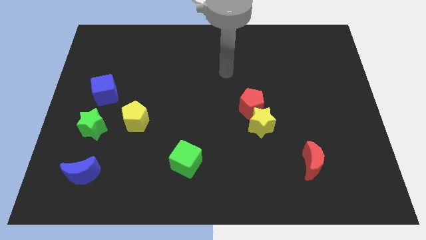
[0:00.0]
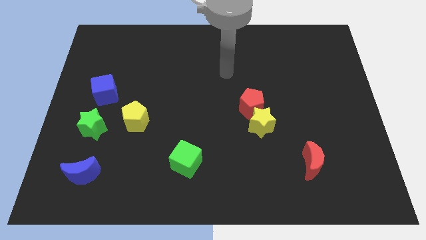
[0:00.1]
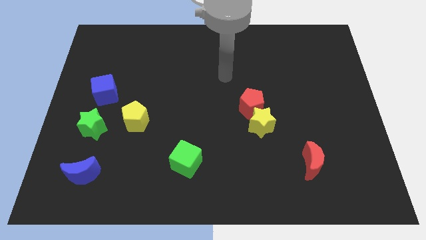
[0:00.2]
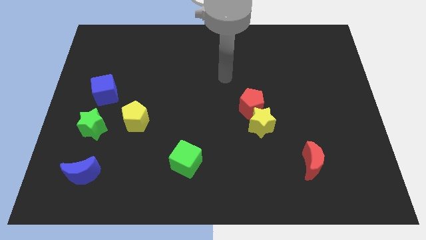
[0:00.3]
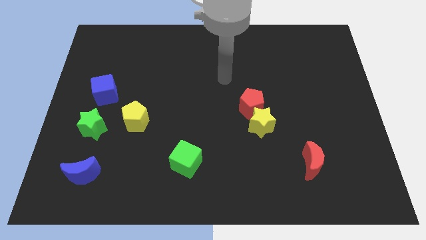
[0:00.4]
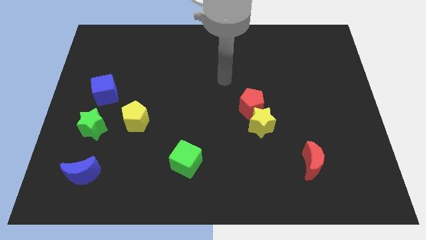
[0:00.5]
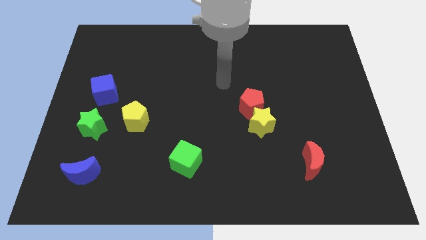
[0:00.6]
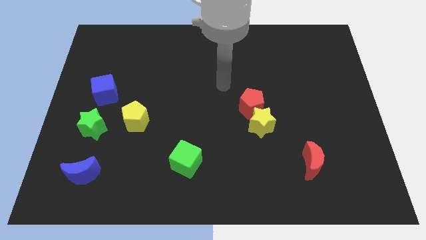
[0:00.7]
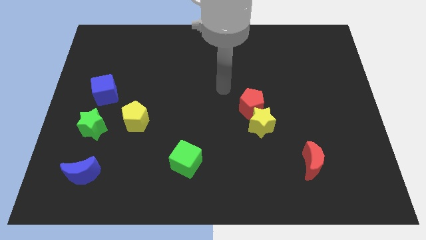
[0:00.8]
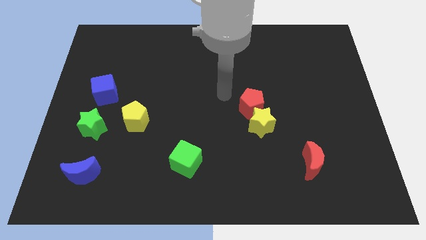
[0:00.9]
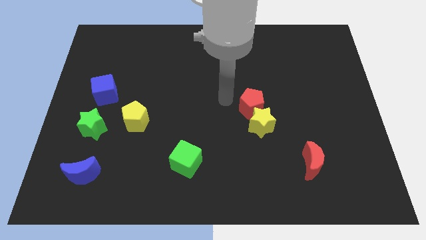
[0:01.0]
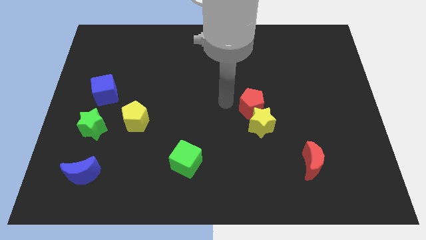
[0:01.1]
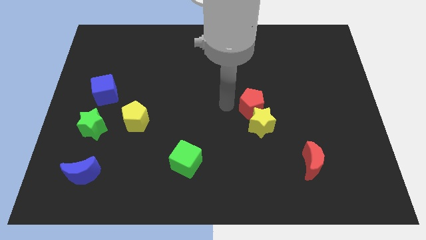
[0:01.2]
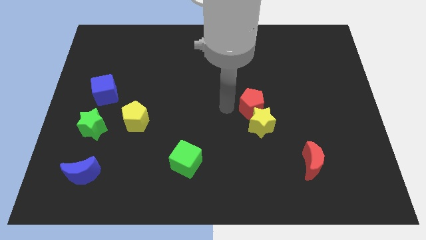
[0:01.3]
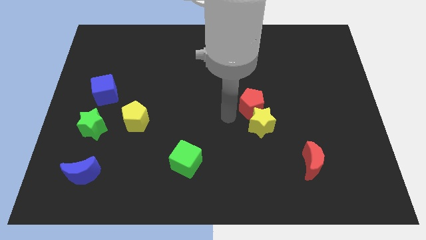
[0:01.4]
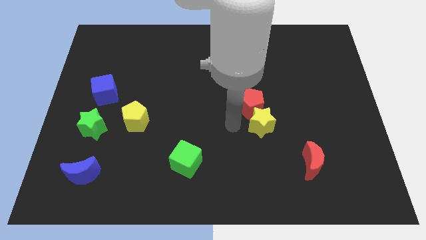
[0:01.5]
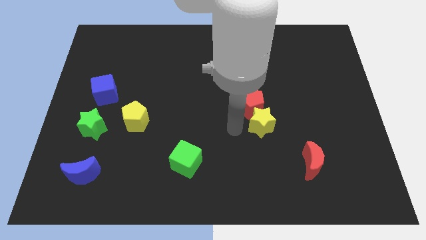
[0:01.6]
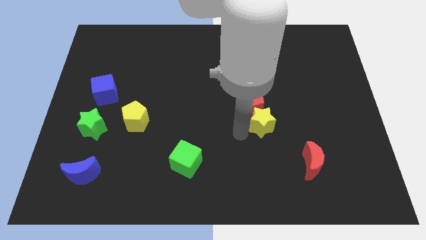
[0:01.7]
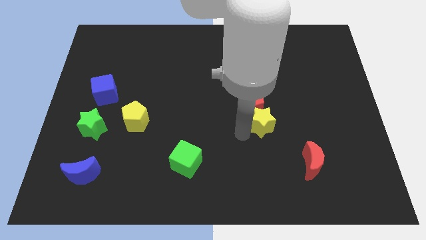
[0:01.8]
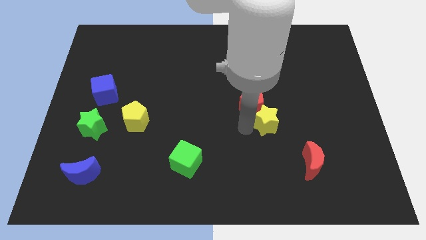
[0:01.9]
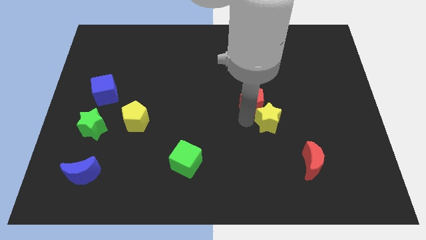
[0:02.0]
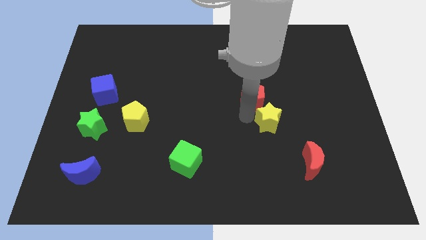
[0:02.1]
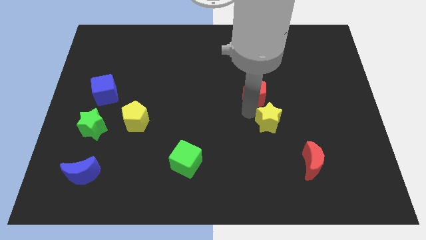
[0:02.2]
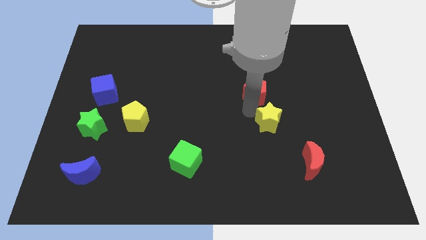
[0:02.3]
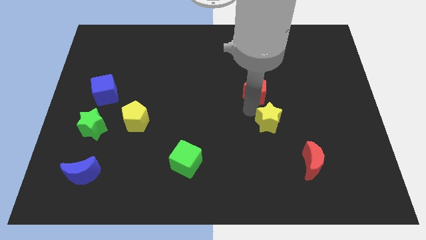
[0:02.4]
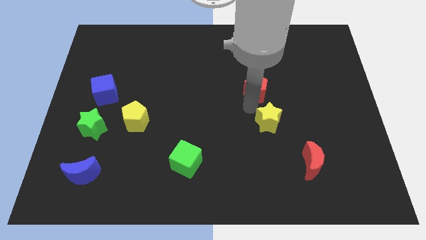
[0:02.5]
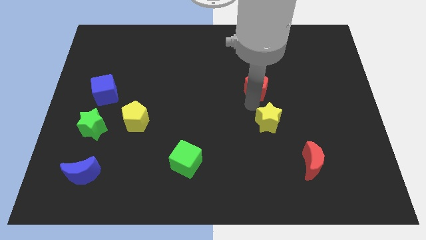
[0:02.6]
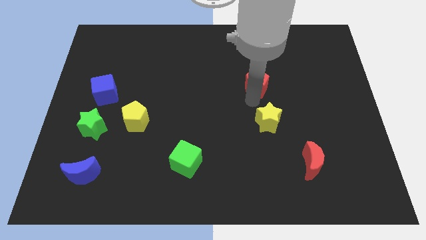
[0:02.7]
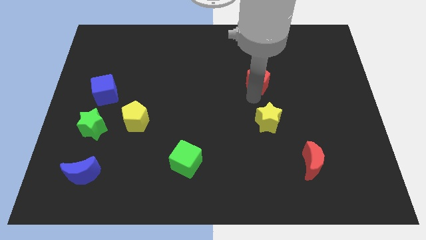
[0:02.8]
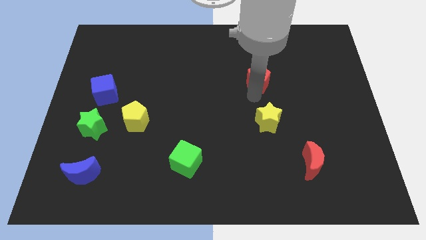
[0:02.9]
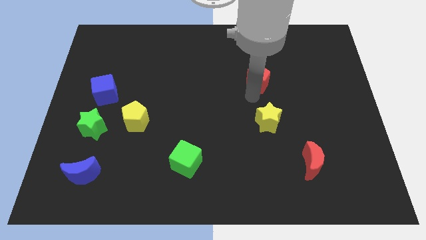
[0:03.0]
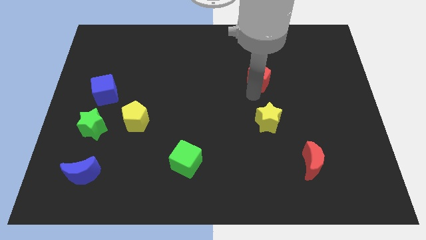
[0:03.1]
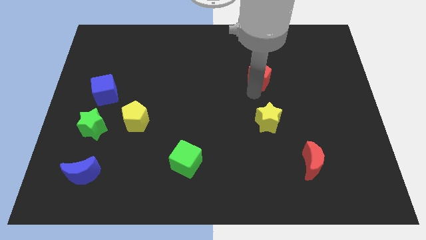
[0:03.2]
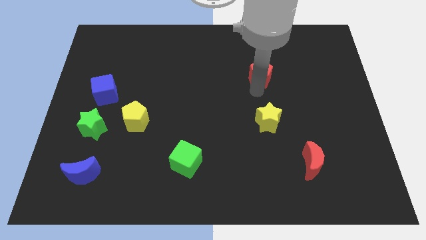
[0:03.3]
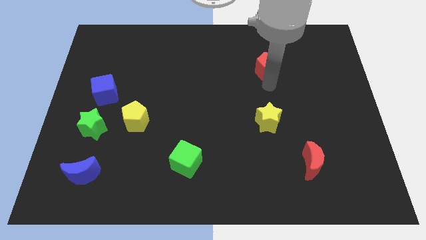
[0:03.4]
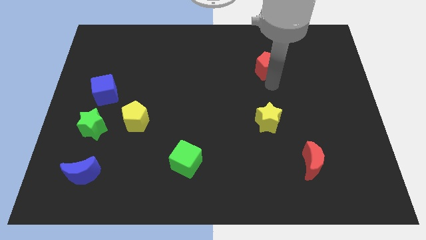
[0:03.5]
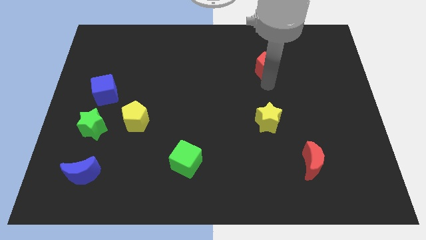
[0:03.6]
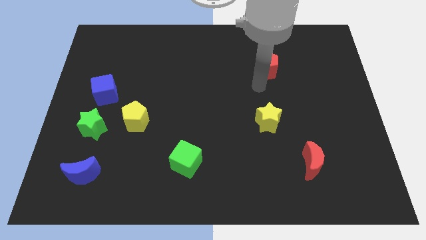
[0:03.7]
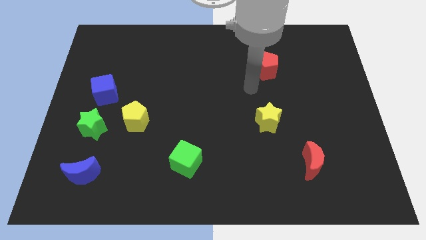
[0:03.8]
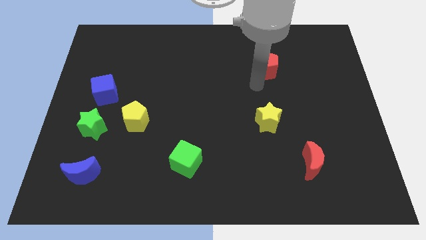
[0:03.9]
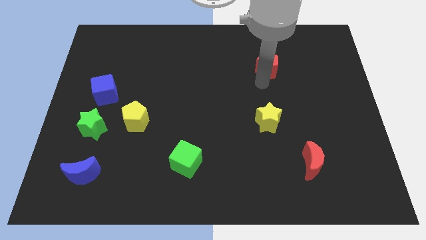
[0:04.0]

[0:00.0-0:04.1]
move the red pentagon above the yellow star

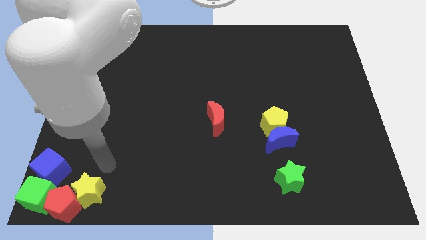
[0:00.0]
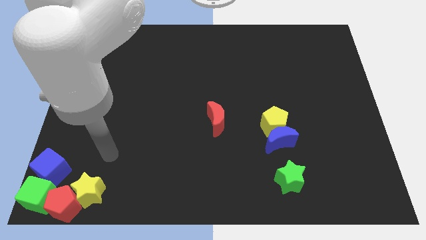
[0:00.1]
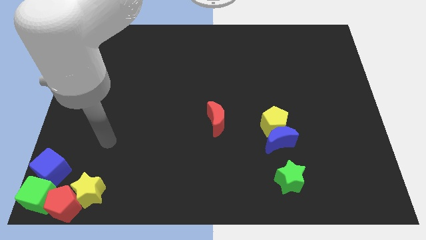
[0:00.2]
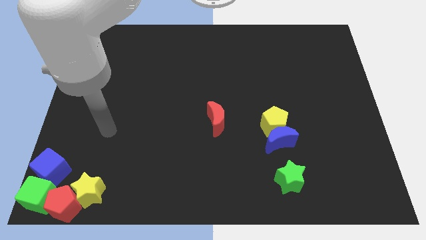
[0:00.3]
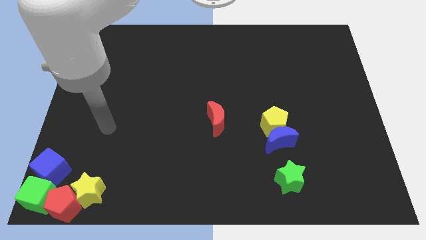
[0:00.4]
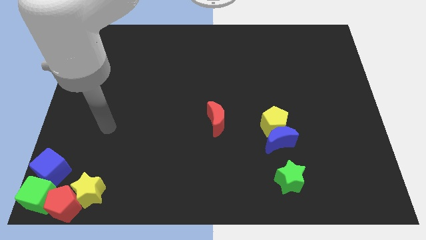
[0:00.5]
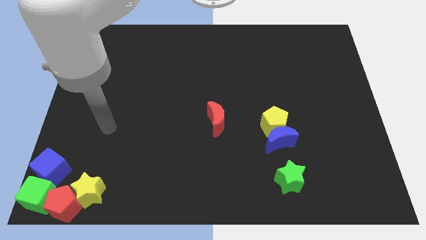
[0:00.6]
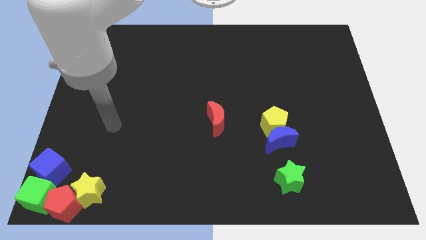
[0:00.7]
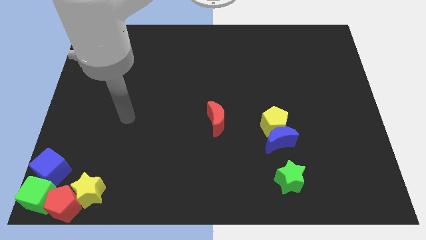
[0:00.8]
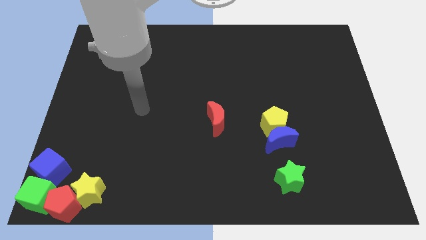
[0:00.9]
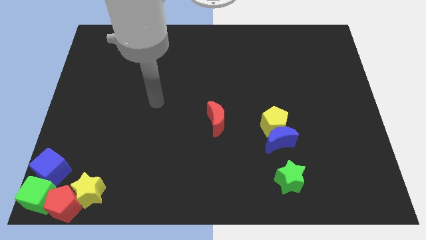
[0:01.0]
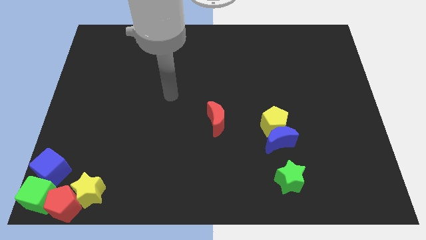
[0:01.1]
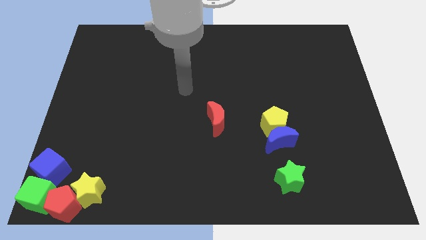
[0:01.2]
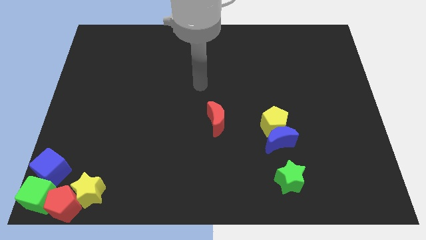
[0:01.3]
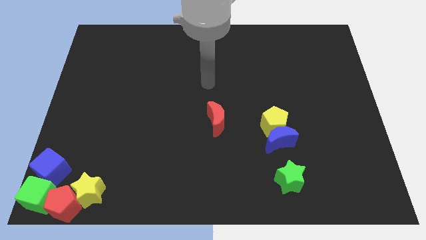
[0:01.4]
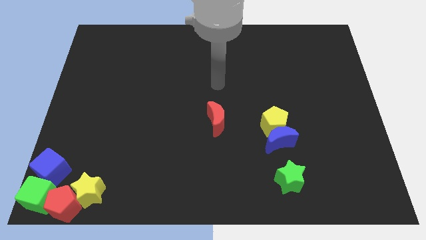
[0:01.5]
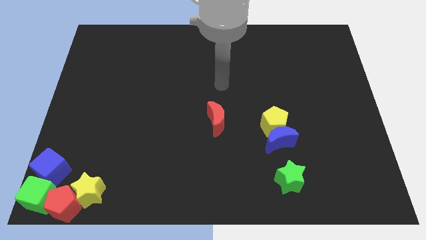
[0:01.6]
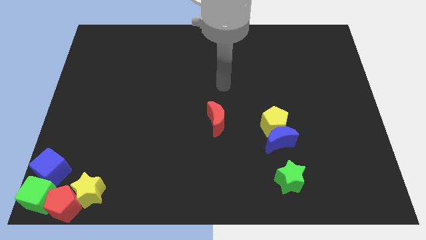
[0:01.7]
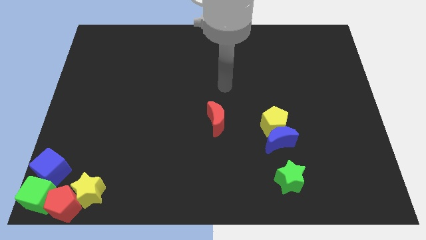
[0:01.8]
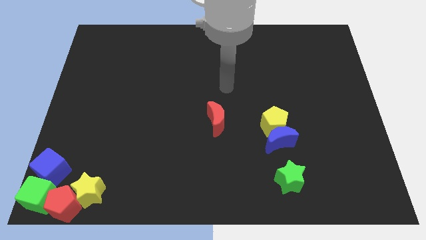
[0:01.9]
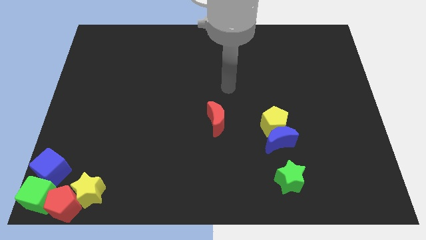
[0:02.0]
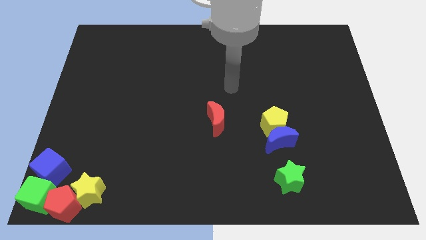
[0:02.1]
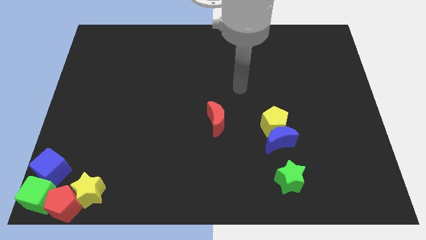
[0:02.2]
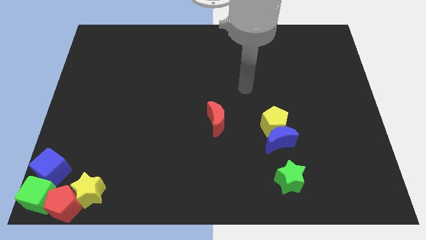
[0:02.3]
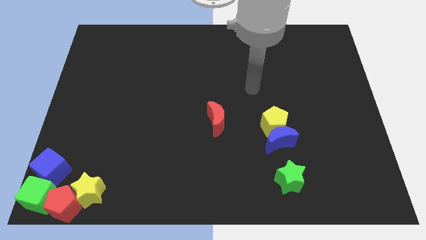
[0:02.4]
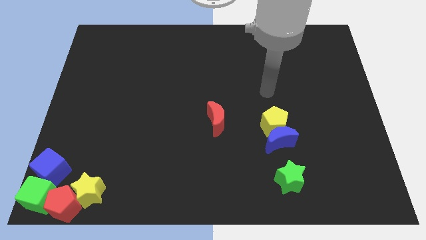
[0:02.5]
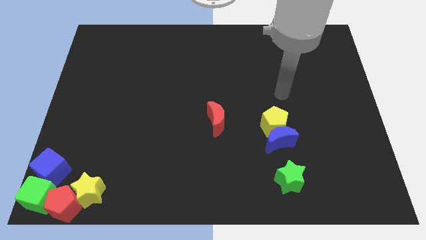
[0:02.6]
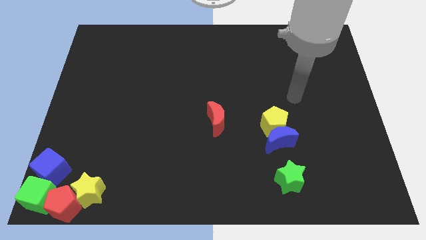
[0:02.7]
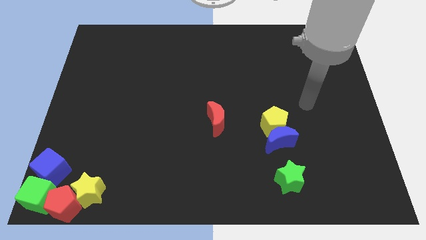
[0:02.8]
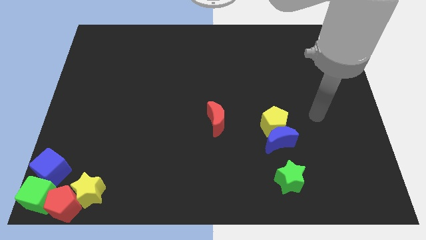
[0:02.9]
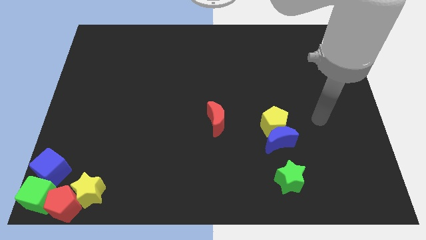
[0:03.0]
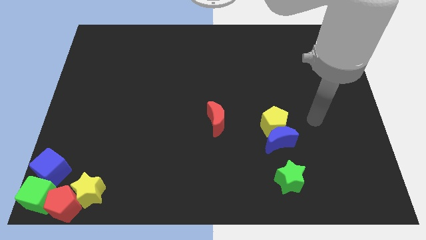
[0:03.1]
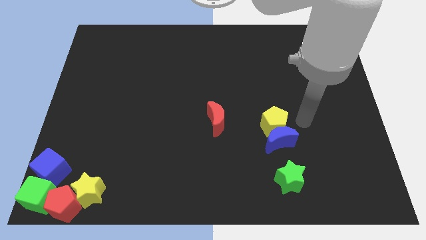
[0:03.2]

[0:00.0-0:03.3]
move your arm towards the yellow pentagon

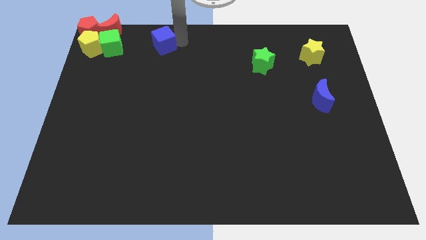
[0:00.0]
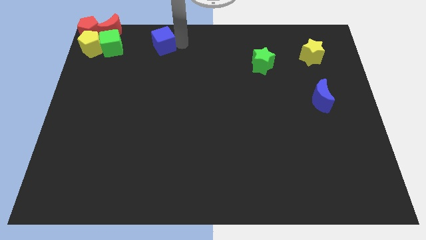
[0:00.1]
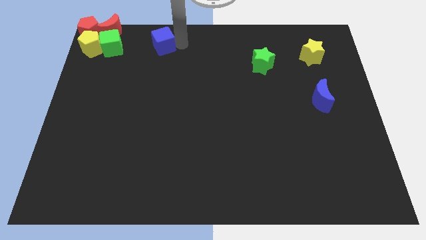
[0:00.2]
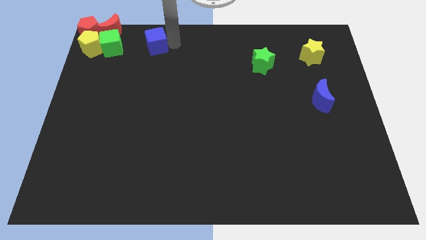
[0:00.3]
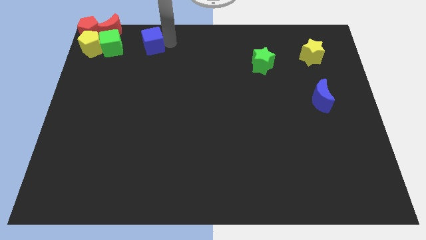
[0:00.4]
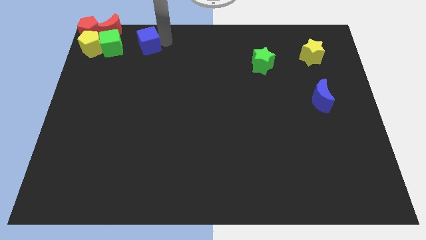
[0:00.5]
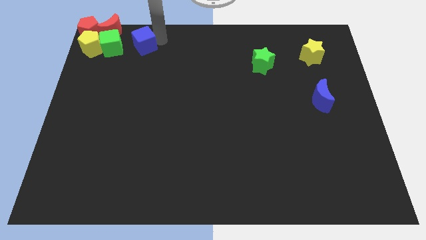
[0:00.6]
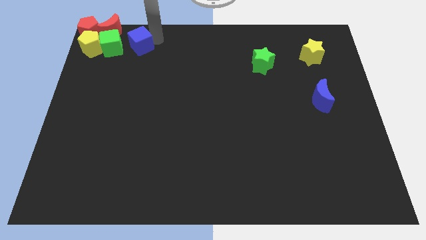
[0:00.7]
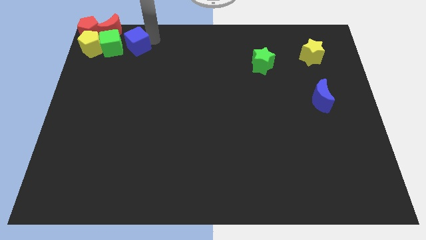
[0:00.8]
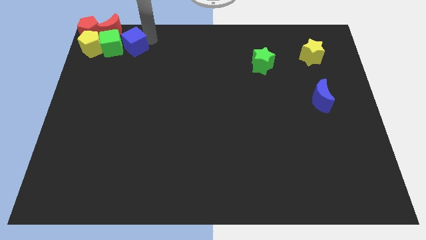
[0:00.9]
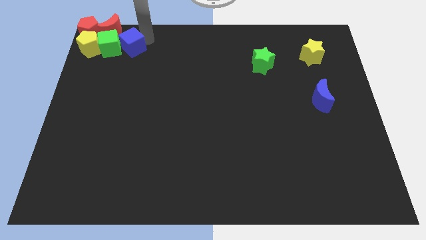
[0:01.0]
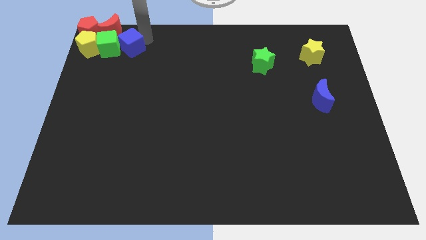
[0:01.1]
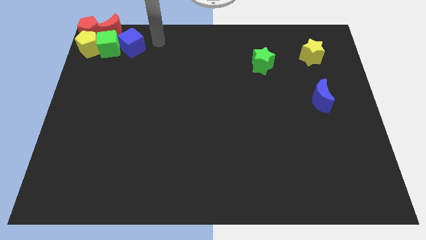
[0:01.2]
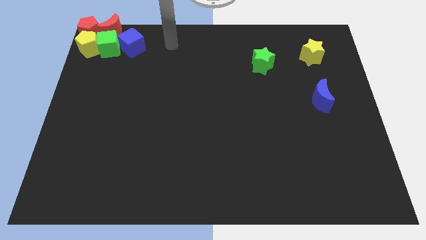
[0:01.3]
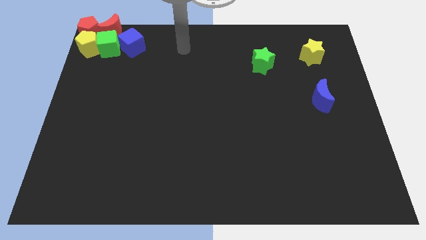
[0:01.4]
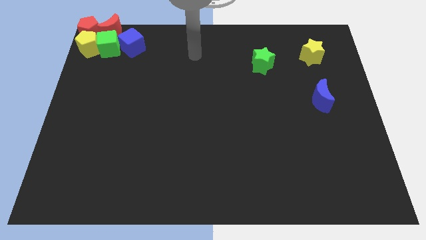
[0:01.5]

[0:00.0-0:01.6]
move blue cube into green cube

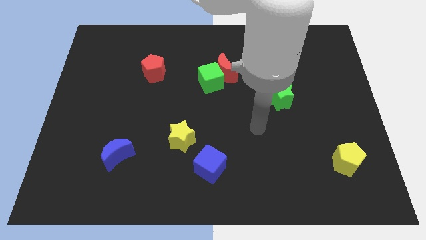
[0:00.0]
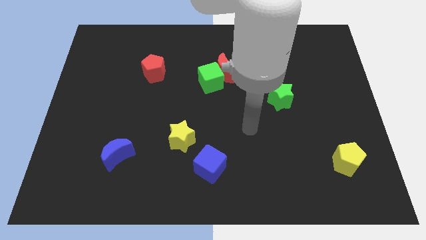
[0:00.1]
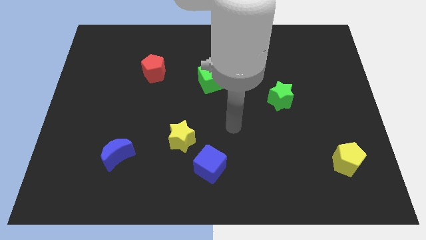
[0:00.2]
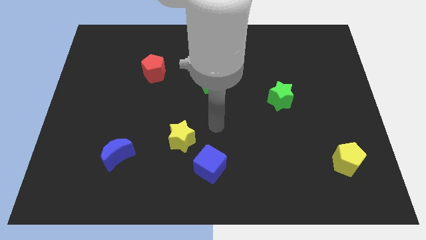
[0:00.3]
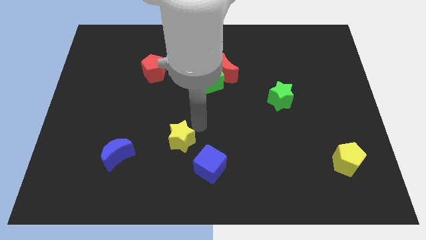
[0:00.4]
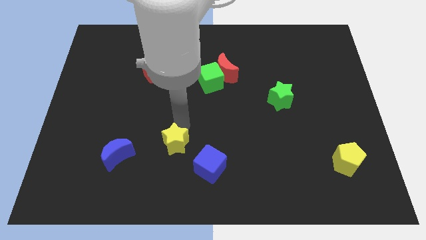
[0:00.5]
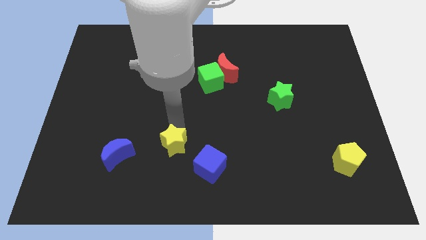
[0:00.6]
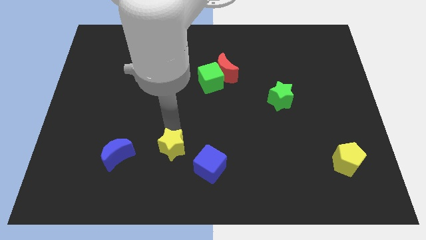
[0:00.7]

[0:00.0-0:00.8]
push the yellow star in between the blue crescent and the blue cube
